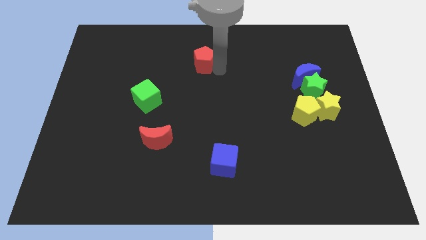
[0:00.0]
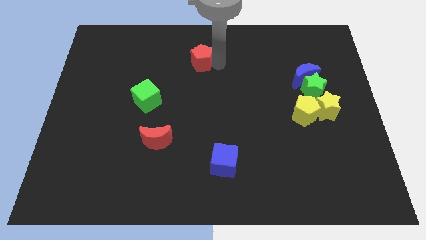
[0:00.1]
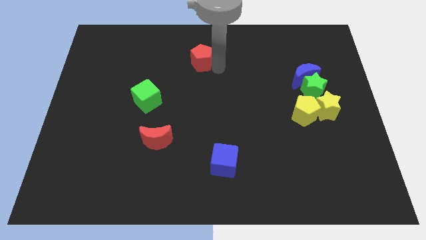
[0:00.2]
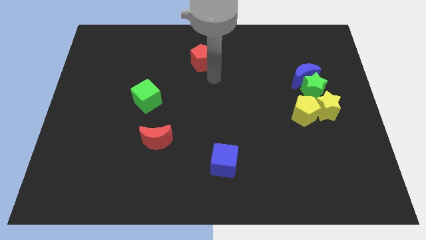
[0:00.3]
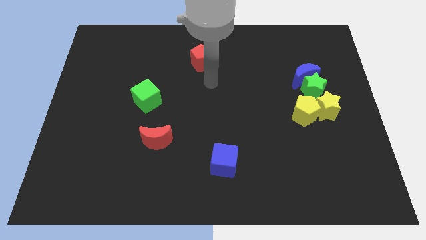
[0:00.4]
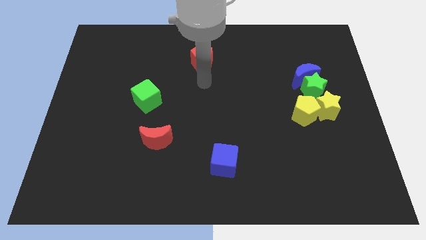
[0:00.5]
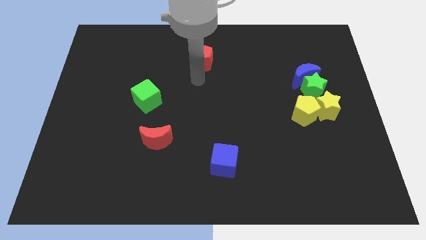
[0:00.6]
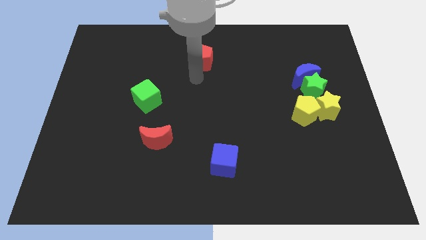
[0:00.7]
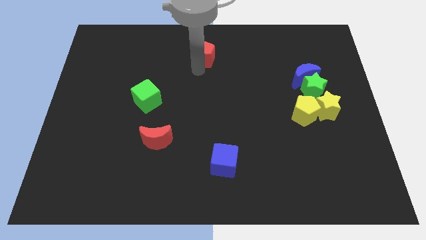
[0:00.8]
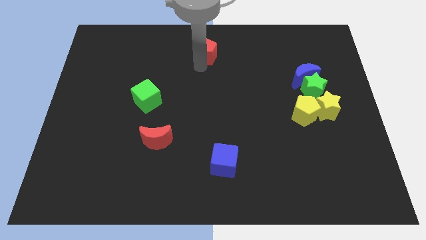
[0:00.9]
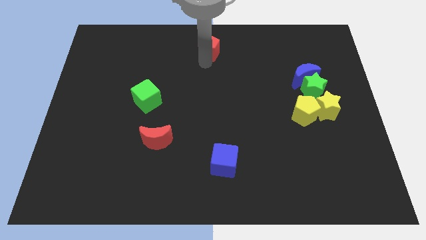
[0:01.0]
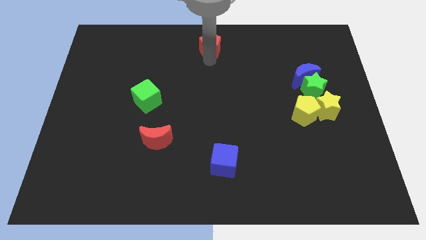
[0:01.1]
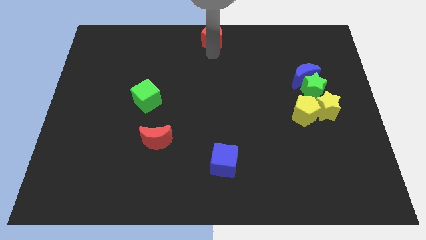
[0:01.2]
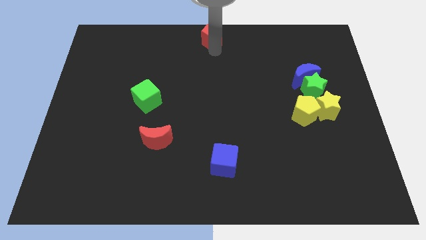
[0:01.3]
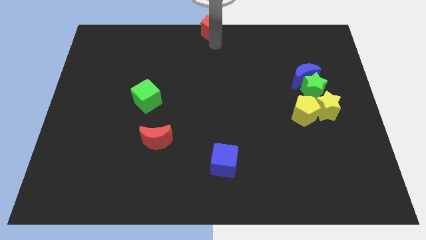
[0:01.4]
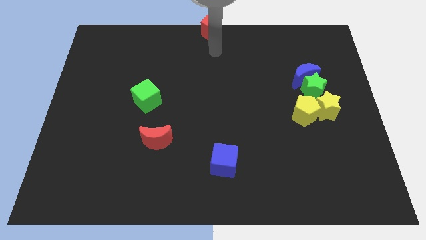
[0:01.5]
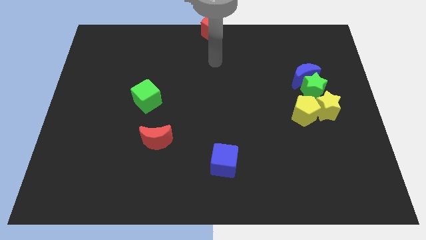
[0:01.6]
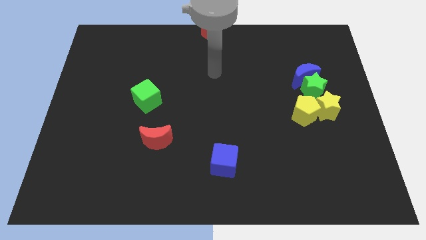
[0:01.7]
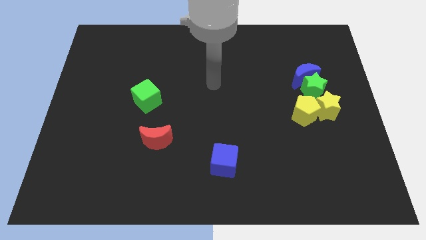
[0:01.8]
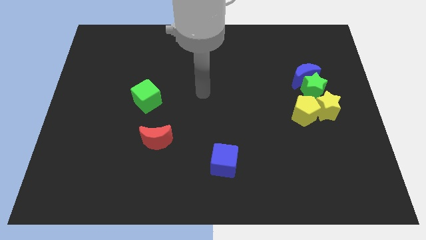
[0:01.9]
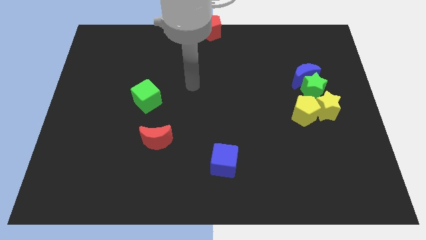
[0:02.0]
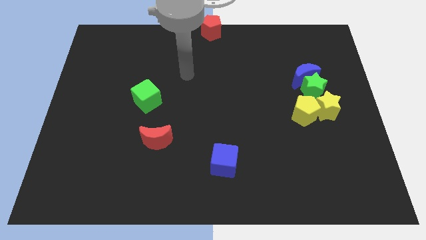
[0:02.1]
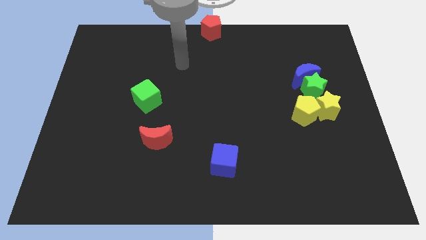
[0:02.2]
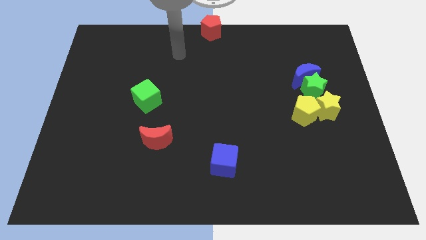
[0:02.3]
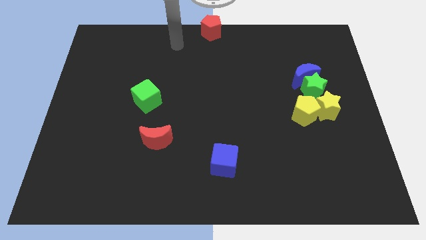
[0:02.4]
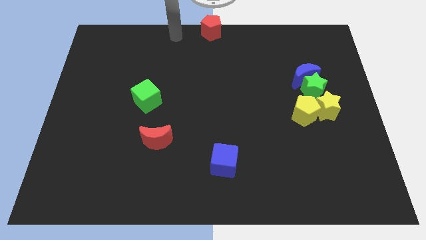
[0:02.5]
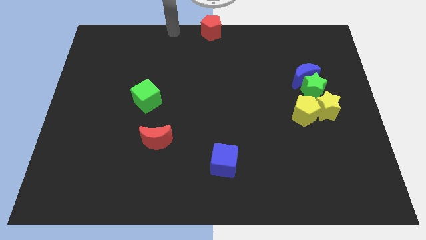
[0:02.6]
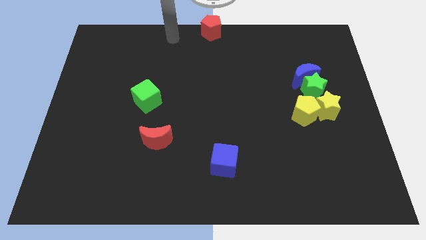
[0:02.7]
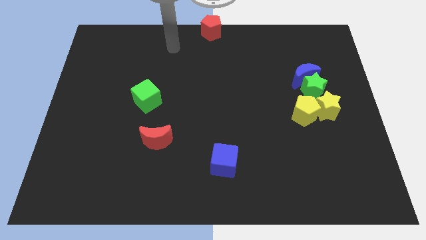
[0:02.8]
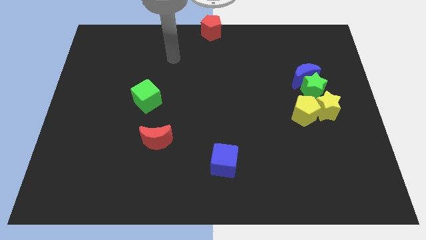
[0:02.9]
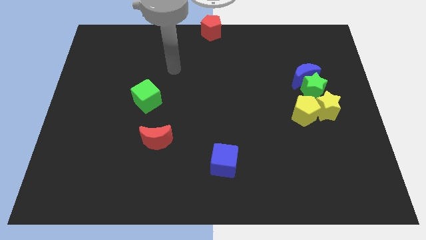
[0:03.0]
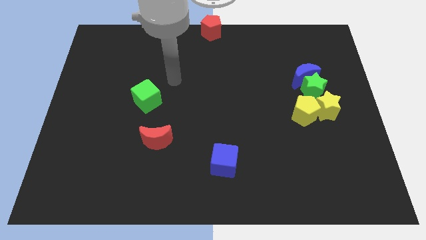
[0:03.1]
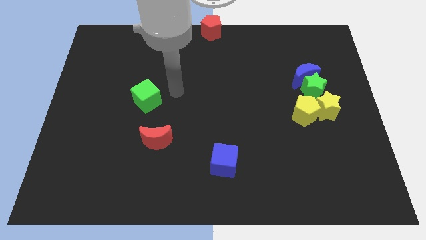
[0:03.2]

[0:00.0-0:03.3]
push red pentagon to the top center of the board

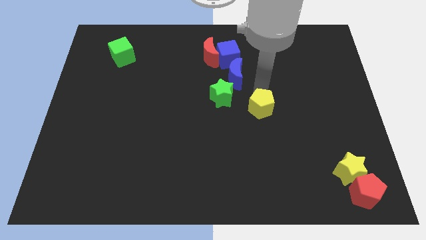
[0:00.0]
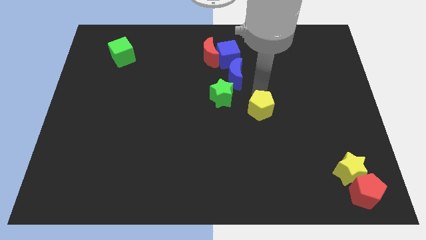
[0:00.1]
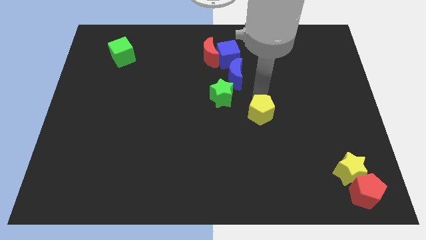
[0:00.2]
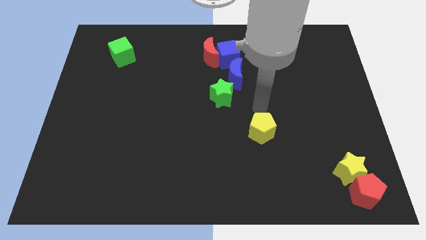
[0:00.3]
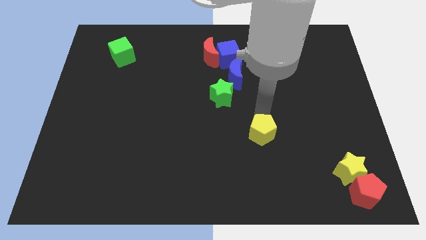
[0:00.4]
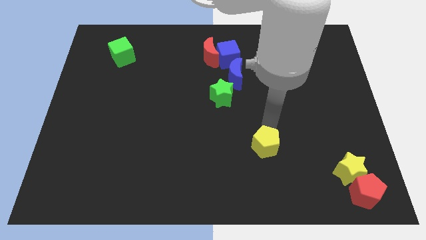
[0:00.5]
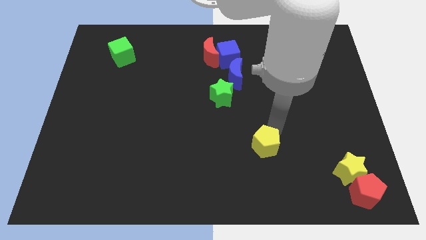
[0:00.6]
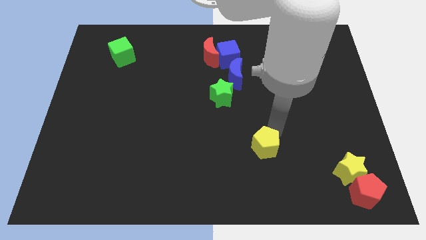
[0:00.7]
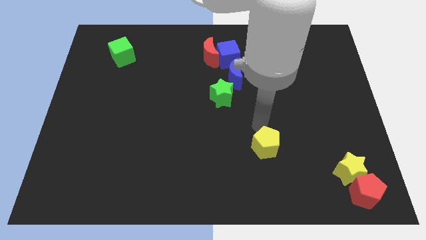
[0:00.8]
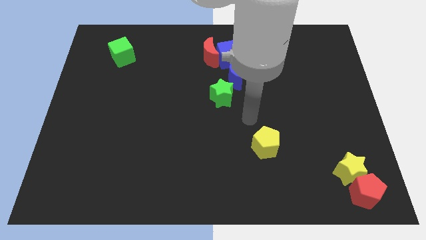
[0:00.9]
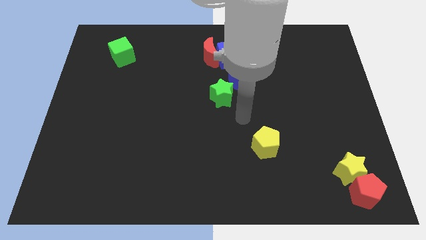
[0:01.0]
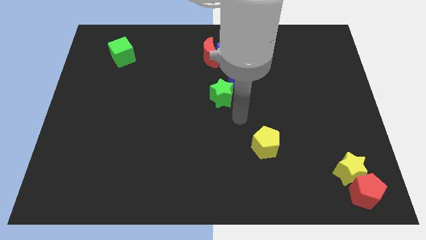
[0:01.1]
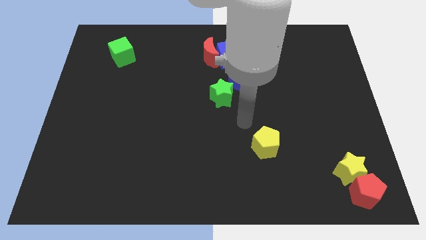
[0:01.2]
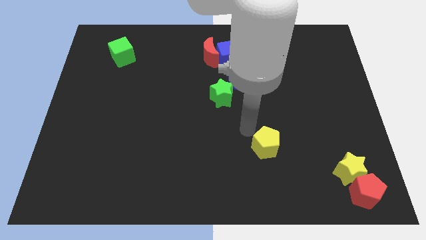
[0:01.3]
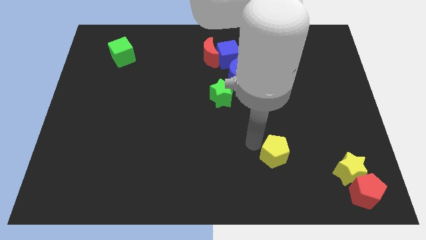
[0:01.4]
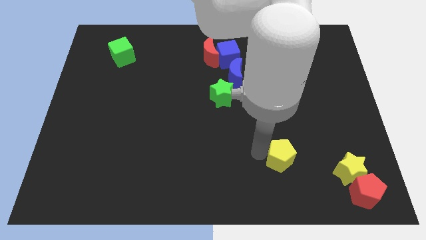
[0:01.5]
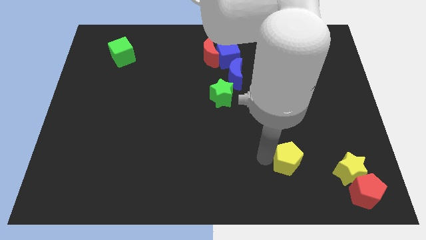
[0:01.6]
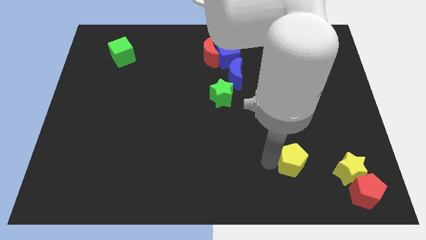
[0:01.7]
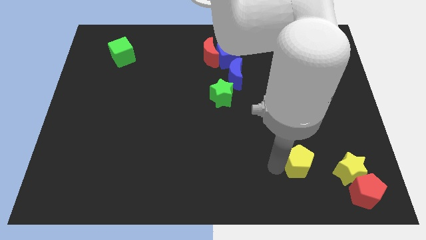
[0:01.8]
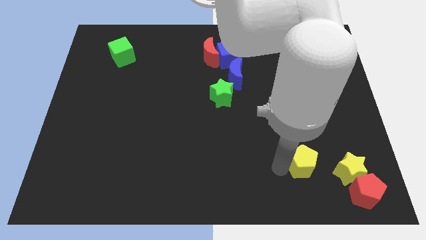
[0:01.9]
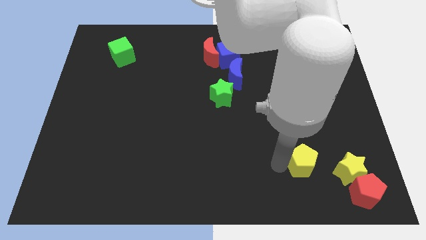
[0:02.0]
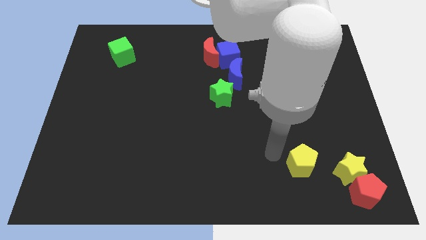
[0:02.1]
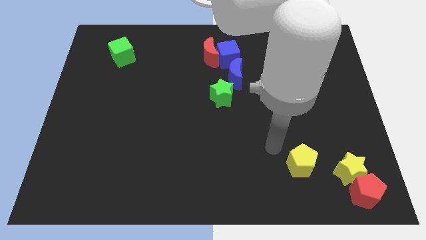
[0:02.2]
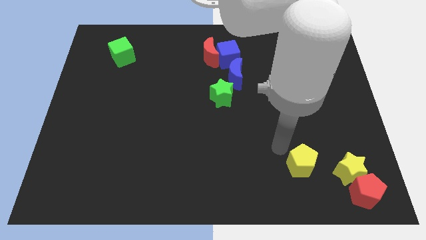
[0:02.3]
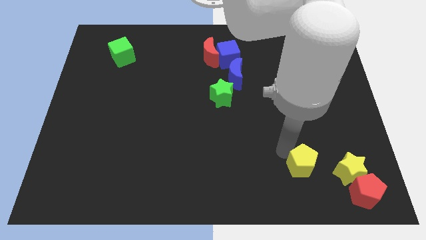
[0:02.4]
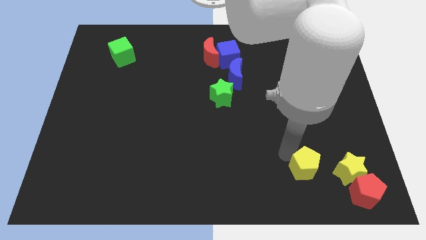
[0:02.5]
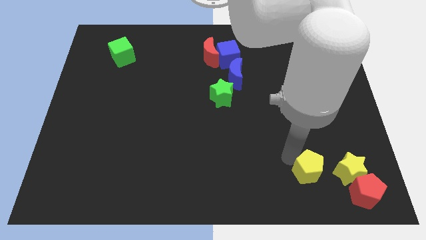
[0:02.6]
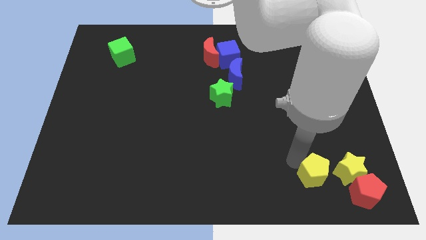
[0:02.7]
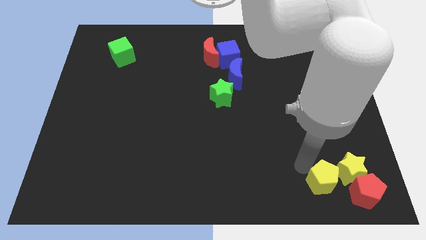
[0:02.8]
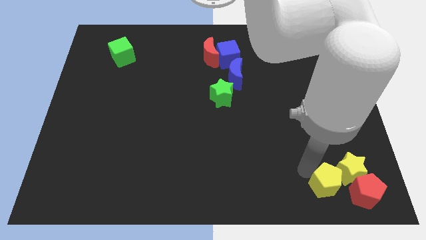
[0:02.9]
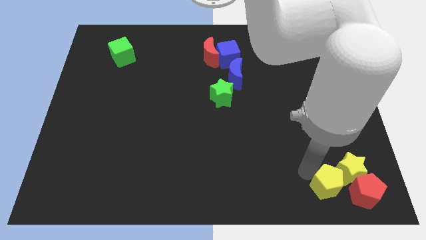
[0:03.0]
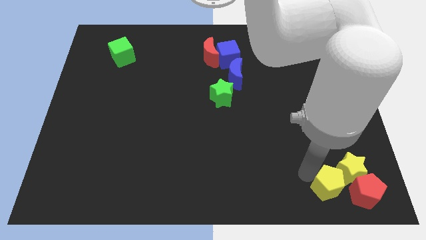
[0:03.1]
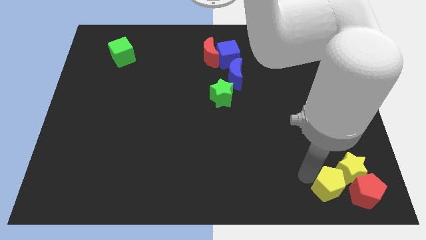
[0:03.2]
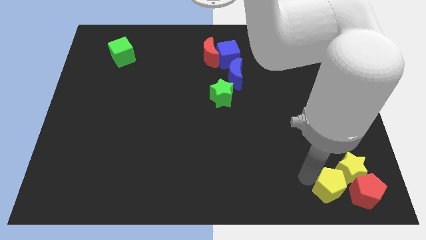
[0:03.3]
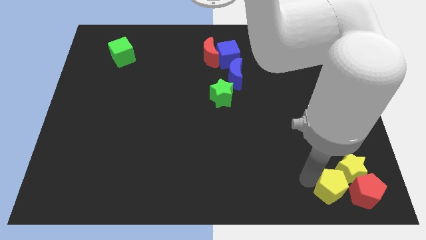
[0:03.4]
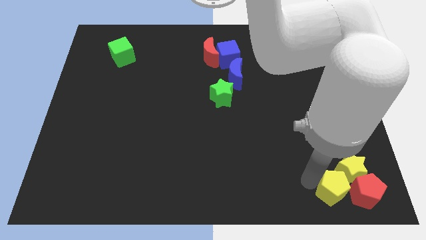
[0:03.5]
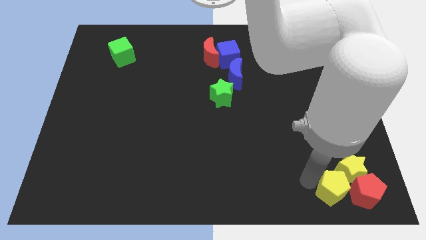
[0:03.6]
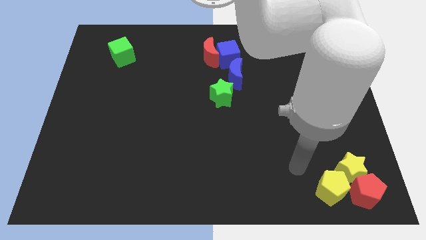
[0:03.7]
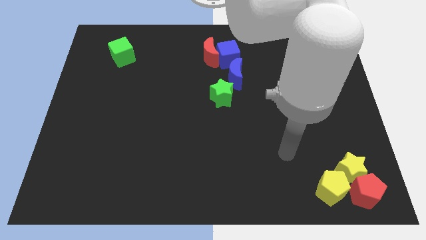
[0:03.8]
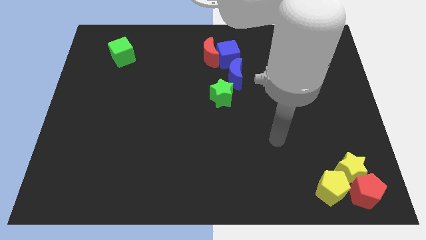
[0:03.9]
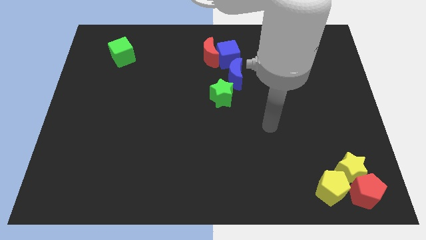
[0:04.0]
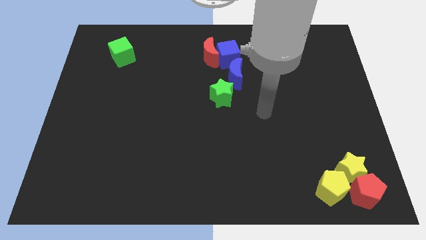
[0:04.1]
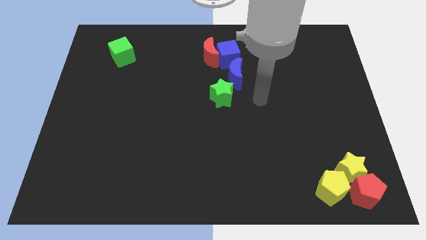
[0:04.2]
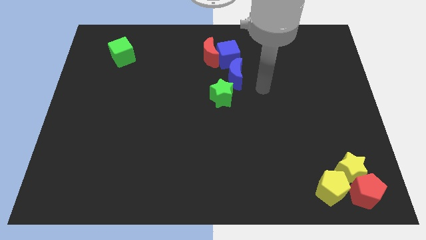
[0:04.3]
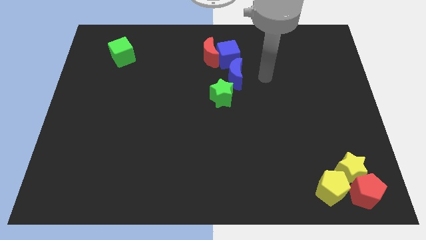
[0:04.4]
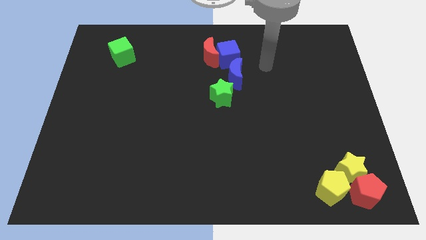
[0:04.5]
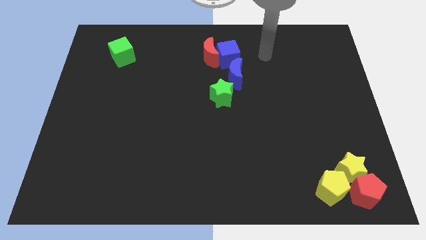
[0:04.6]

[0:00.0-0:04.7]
move the yellow pentagon left to the red pentagon

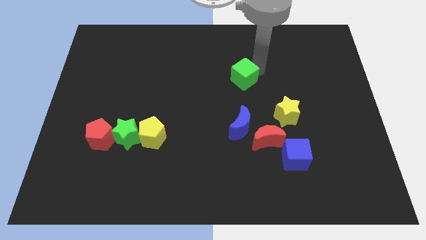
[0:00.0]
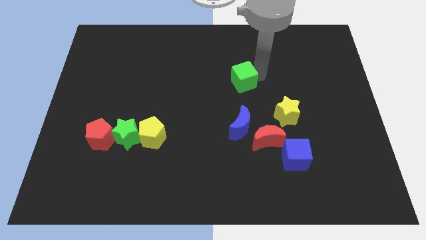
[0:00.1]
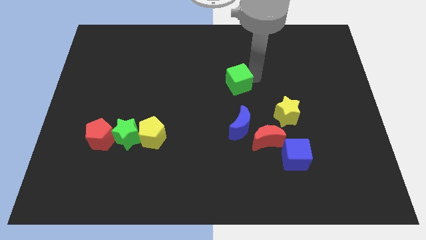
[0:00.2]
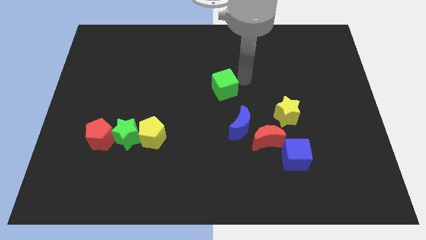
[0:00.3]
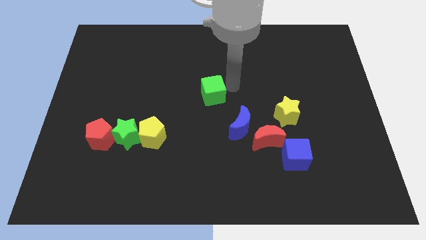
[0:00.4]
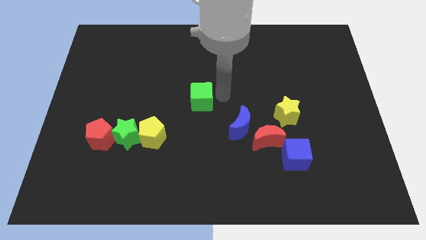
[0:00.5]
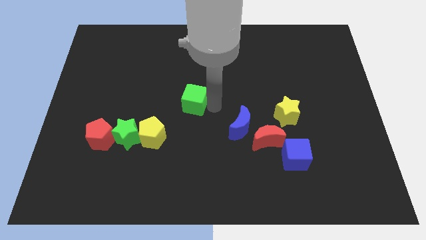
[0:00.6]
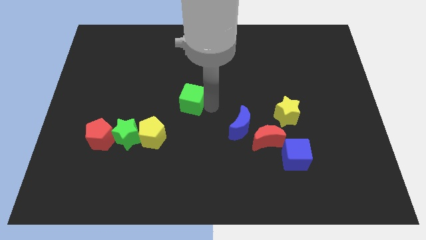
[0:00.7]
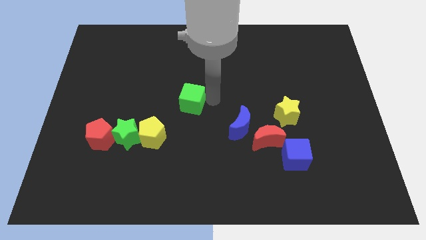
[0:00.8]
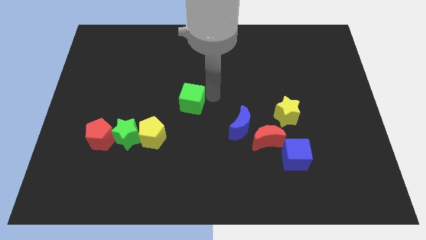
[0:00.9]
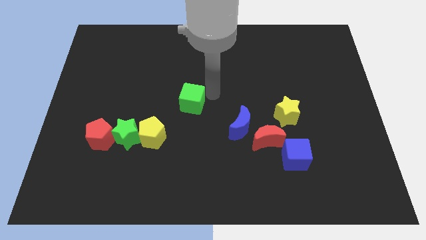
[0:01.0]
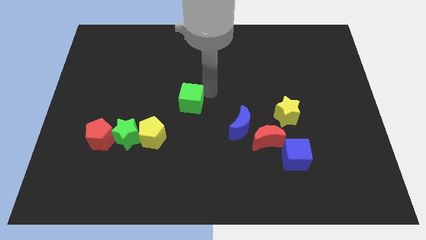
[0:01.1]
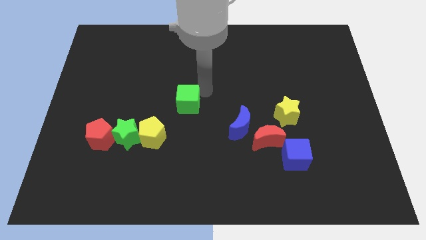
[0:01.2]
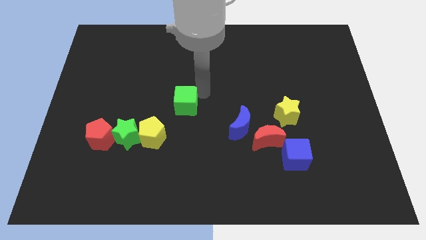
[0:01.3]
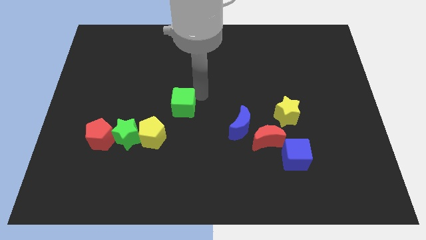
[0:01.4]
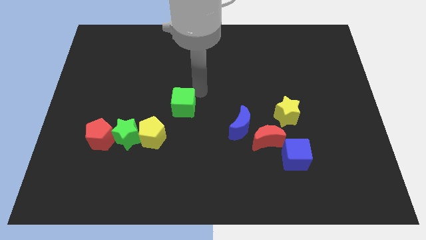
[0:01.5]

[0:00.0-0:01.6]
push the green cube towards the center of the board
